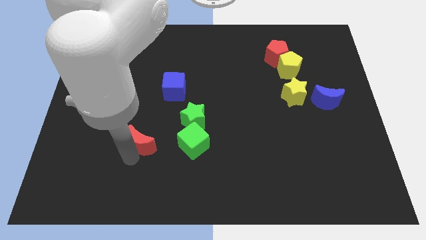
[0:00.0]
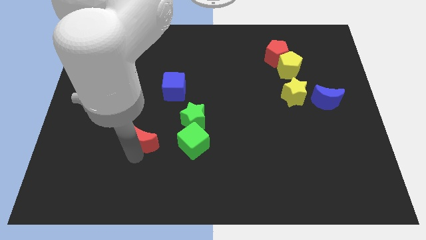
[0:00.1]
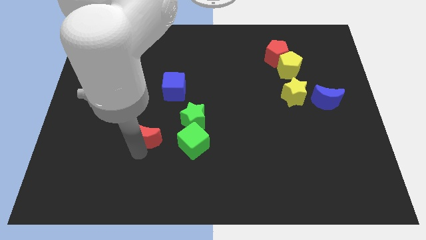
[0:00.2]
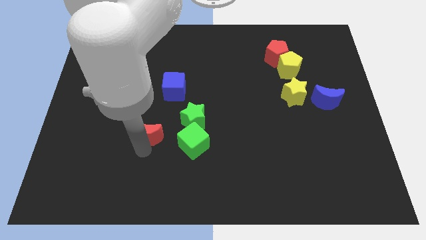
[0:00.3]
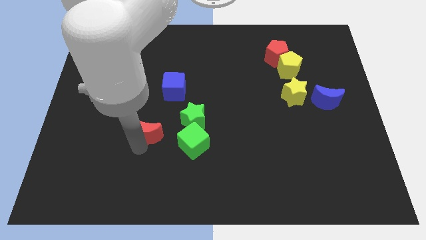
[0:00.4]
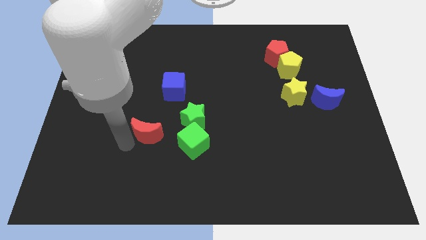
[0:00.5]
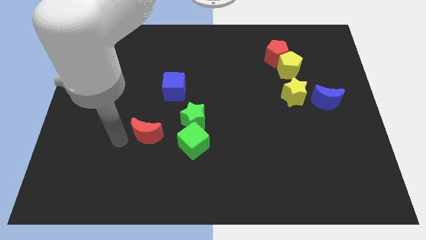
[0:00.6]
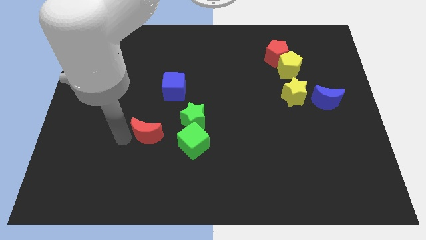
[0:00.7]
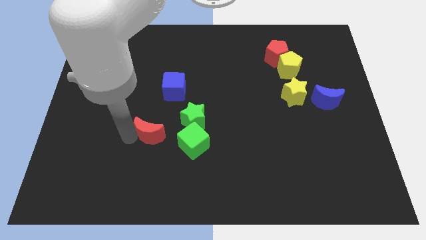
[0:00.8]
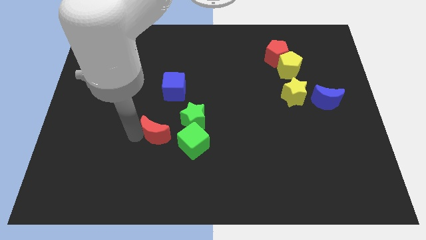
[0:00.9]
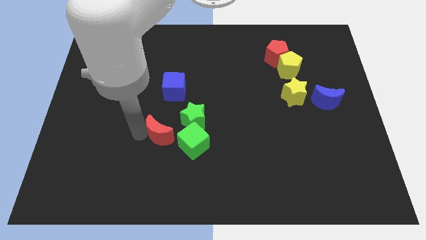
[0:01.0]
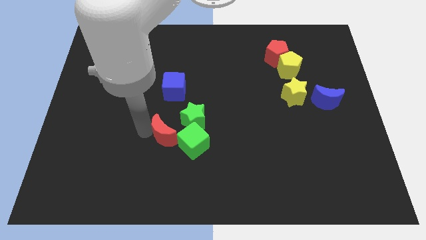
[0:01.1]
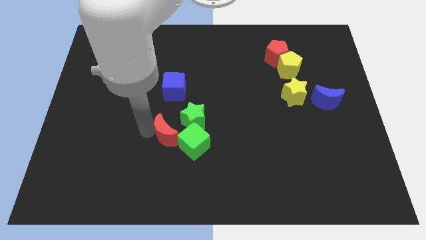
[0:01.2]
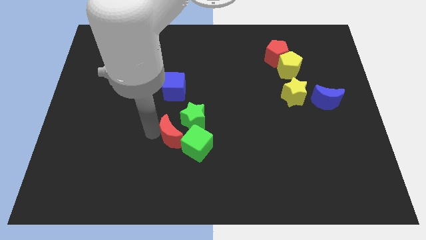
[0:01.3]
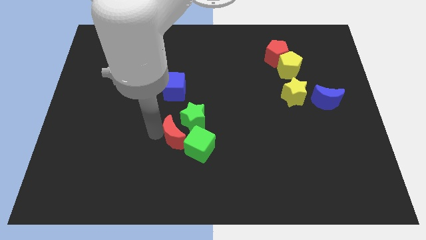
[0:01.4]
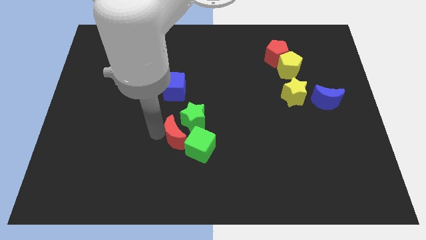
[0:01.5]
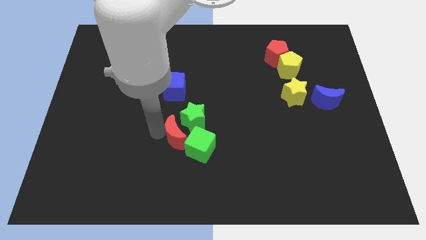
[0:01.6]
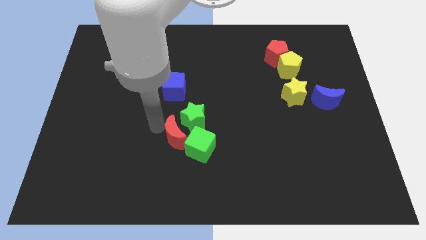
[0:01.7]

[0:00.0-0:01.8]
move the red moon towards the green blocks

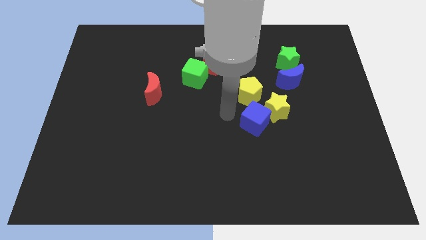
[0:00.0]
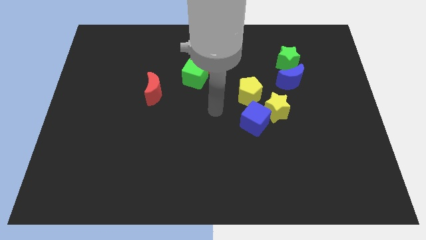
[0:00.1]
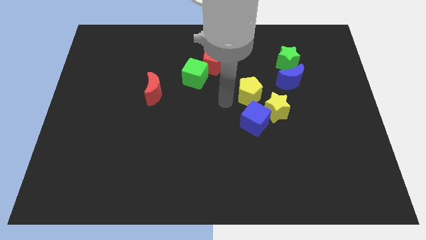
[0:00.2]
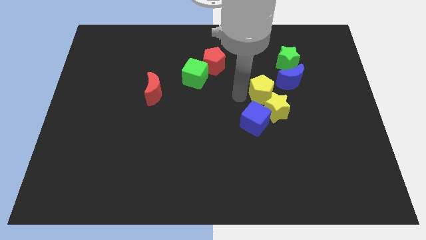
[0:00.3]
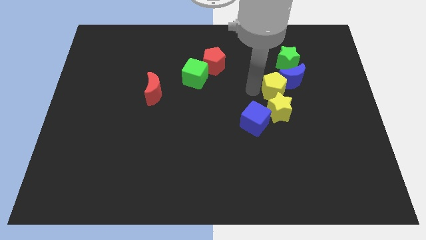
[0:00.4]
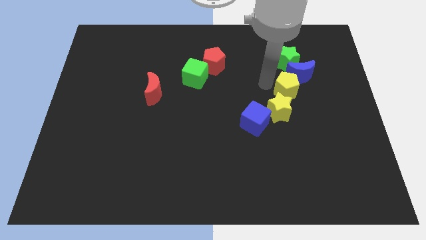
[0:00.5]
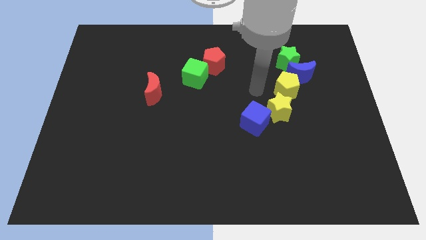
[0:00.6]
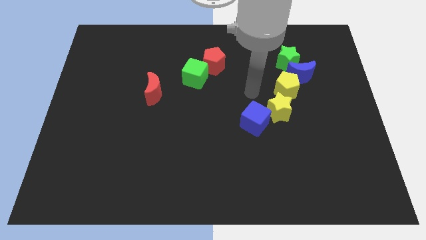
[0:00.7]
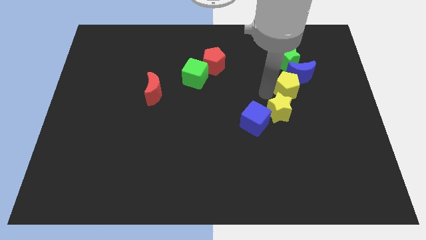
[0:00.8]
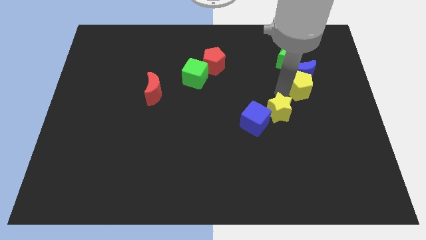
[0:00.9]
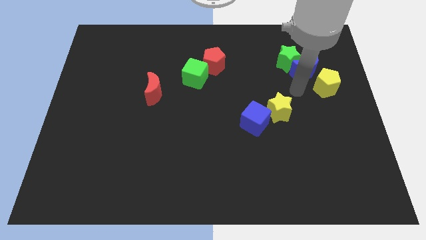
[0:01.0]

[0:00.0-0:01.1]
push the yellow pentagon bottom left to the blue crescent

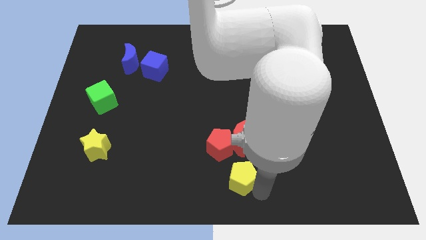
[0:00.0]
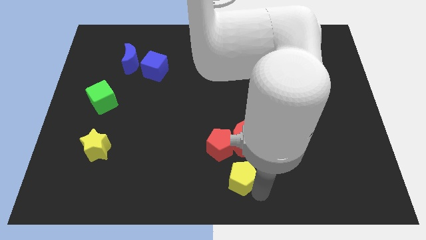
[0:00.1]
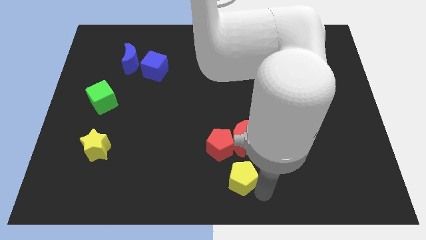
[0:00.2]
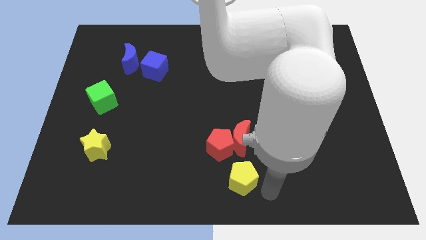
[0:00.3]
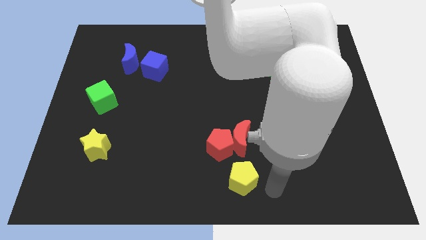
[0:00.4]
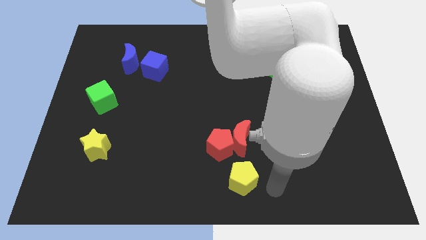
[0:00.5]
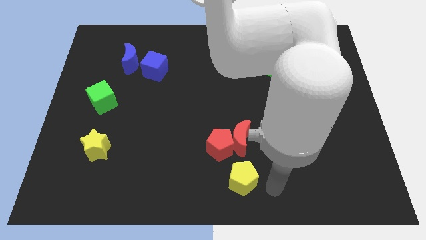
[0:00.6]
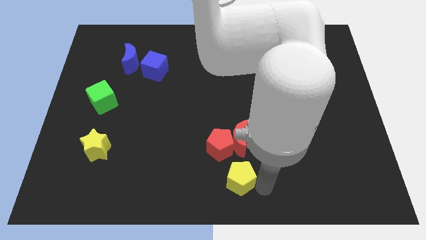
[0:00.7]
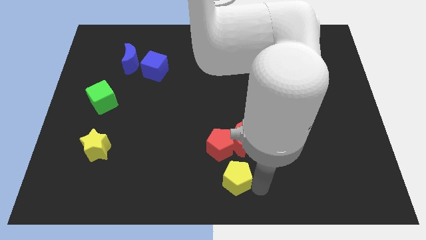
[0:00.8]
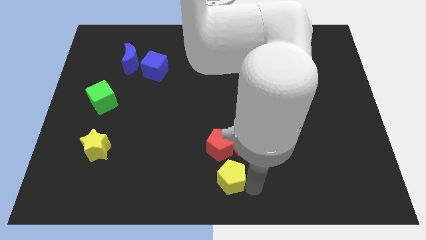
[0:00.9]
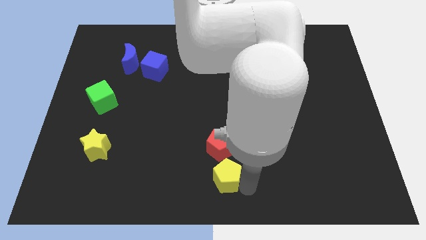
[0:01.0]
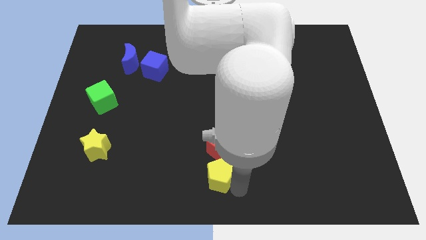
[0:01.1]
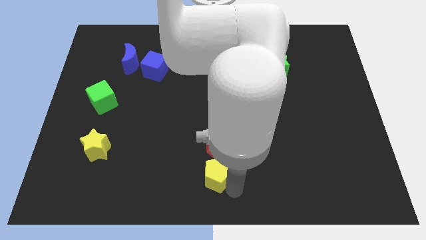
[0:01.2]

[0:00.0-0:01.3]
move the yellow pentagon to the bottom of the red pentagon

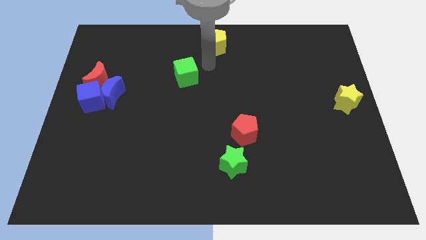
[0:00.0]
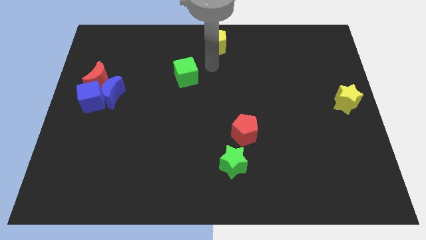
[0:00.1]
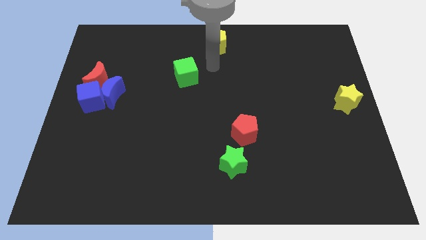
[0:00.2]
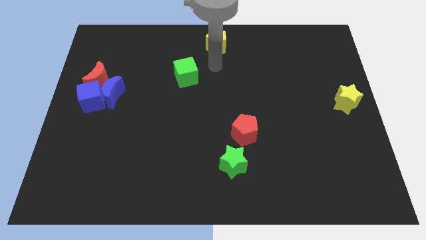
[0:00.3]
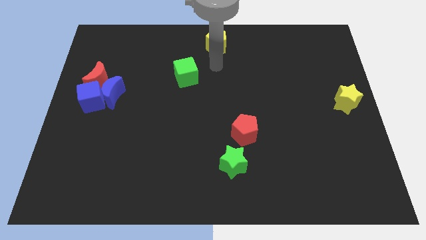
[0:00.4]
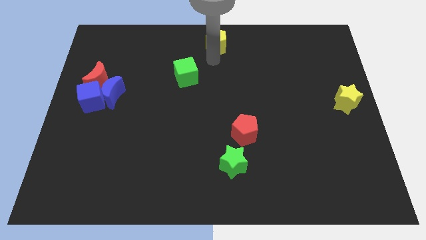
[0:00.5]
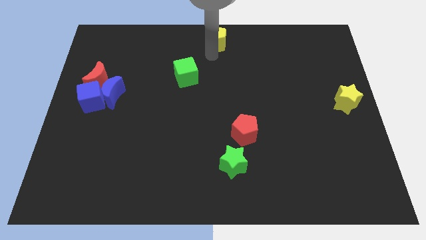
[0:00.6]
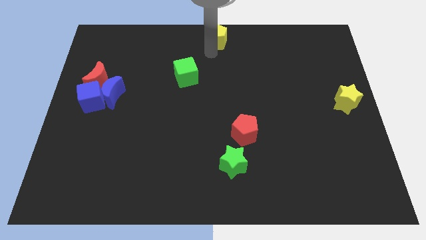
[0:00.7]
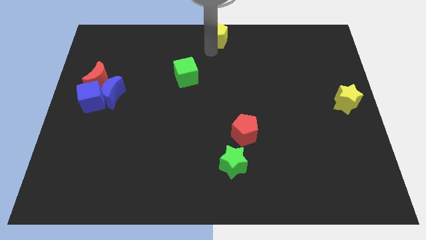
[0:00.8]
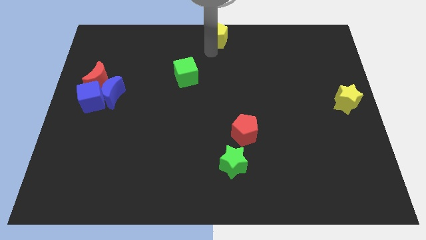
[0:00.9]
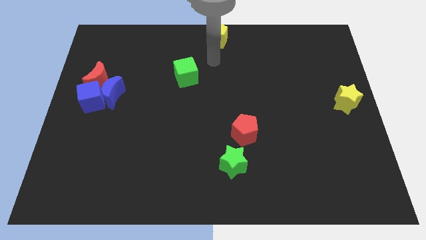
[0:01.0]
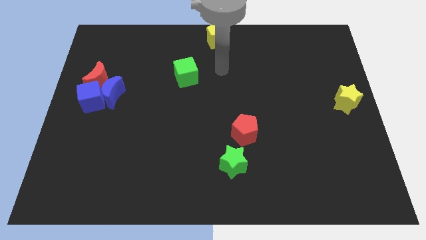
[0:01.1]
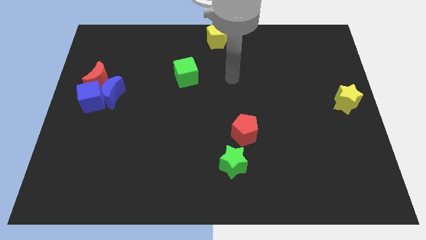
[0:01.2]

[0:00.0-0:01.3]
slightly push the yellow star at the top center of the board

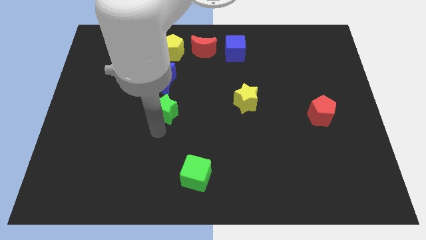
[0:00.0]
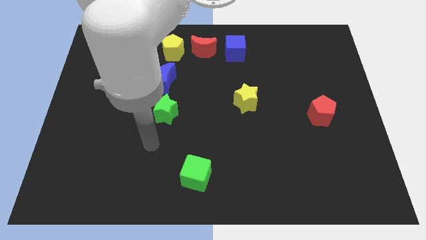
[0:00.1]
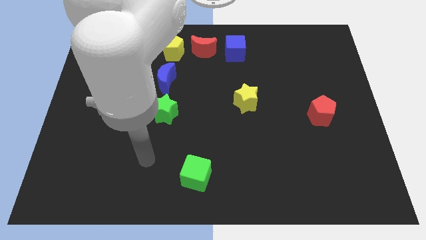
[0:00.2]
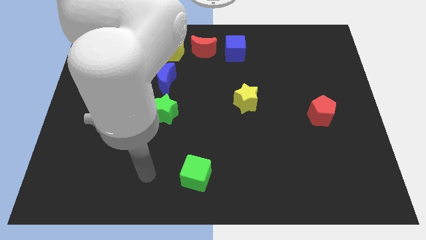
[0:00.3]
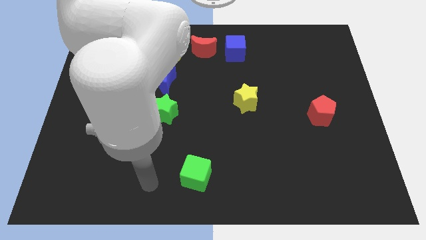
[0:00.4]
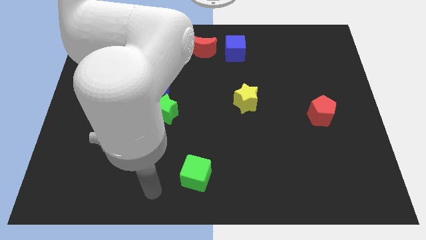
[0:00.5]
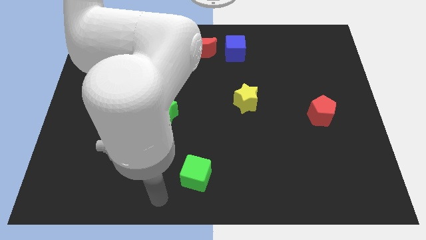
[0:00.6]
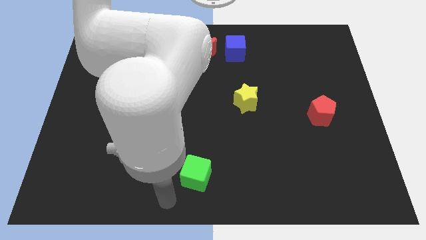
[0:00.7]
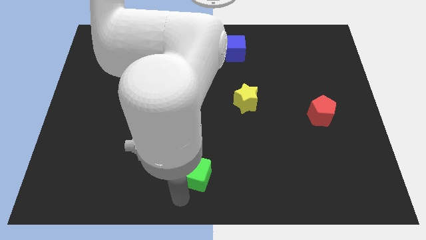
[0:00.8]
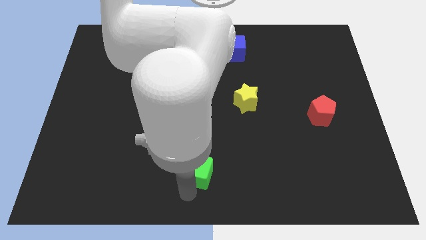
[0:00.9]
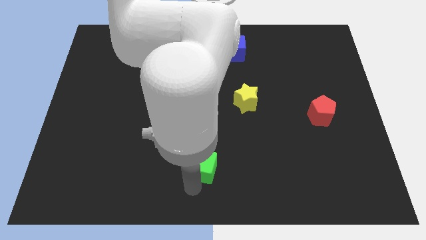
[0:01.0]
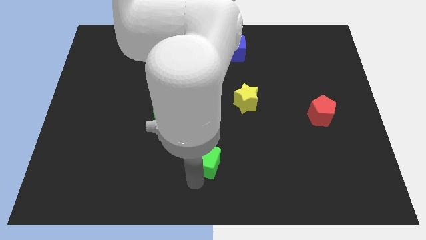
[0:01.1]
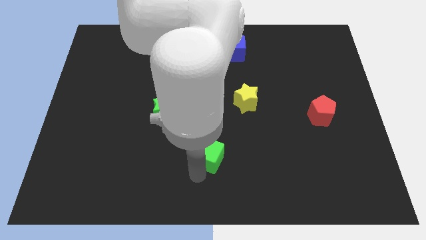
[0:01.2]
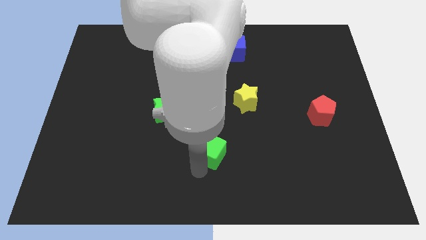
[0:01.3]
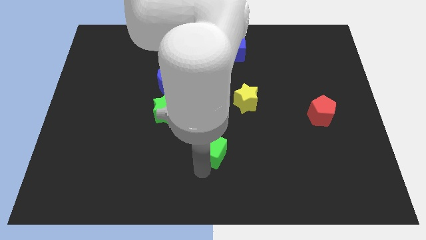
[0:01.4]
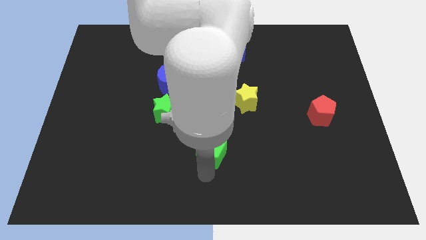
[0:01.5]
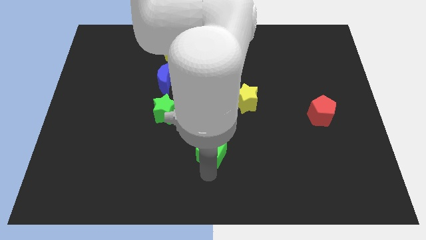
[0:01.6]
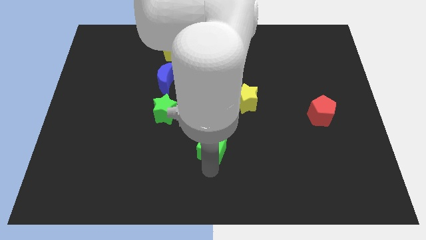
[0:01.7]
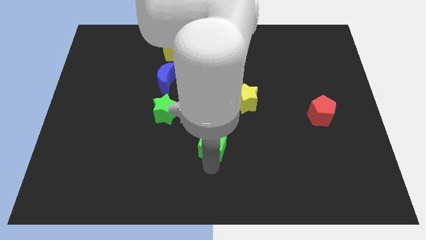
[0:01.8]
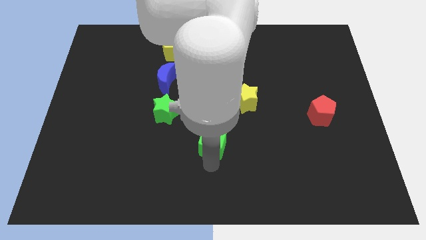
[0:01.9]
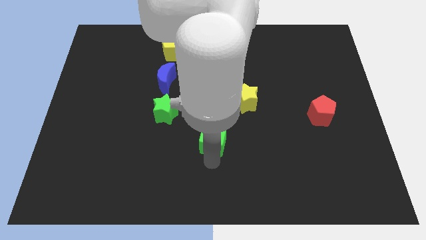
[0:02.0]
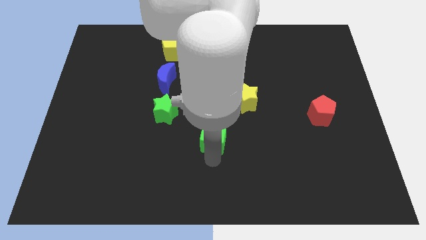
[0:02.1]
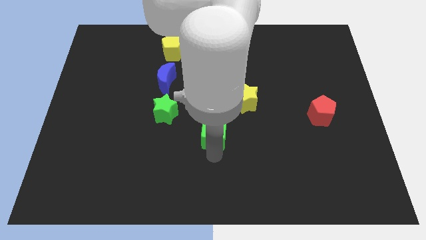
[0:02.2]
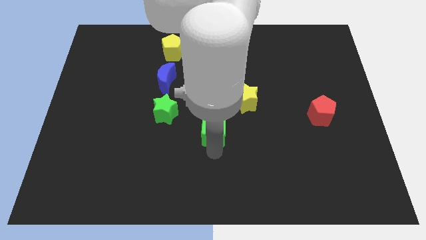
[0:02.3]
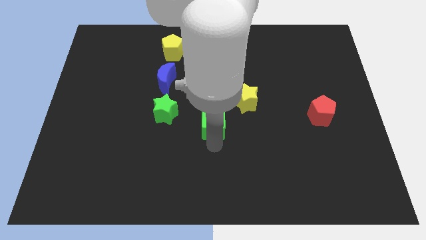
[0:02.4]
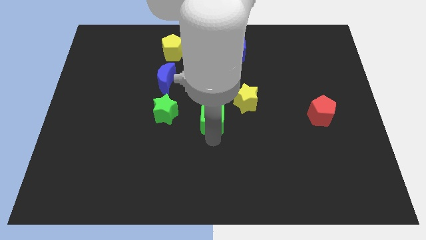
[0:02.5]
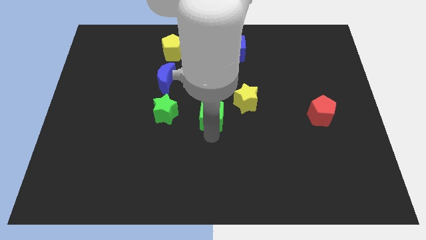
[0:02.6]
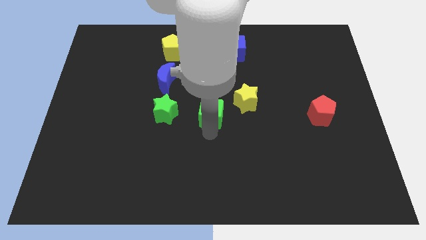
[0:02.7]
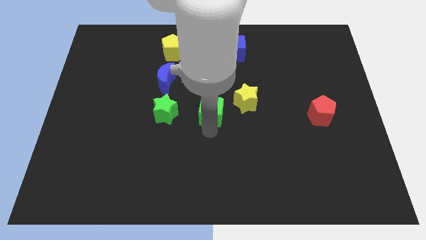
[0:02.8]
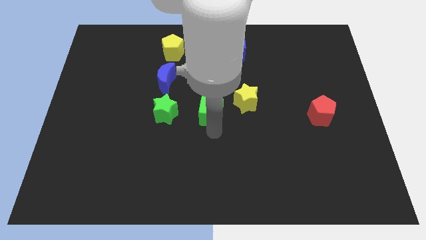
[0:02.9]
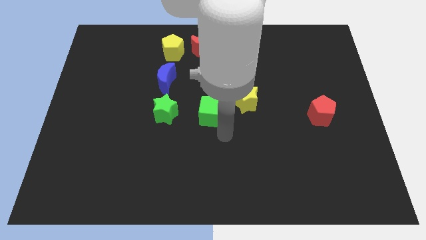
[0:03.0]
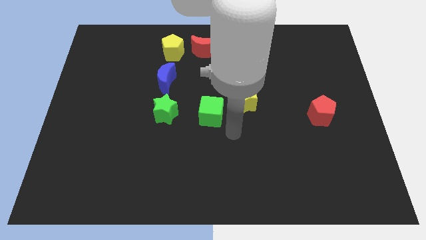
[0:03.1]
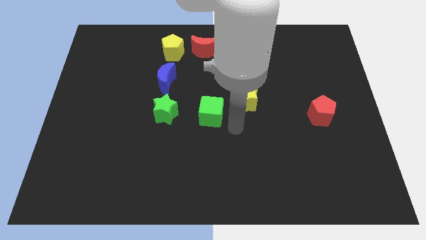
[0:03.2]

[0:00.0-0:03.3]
push the green cube to the right of the green star
